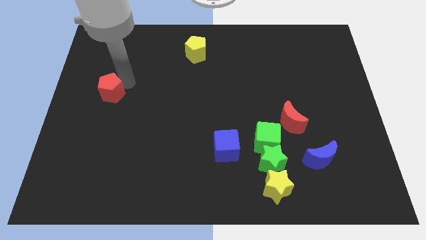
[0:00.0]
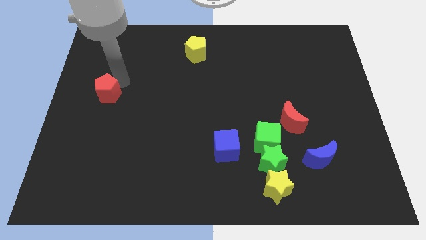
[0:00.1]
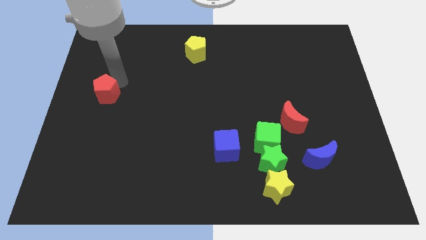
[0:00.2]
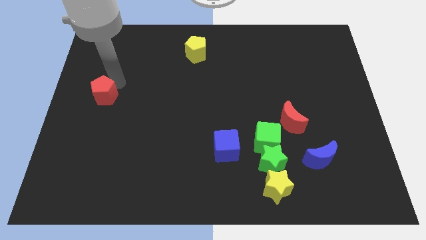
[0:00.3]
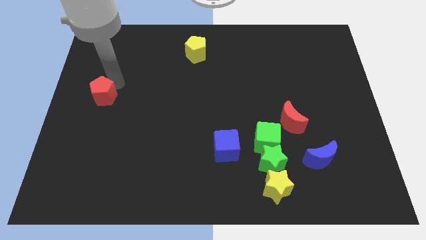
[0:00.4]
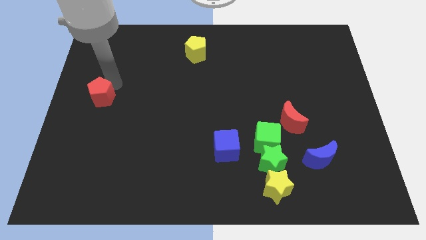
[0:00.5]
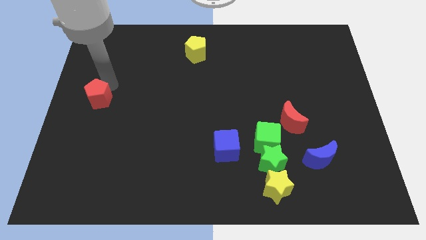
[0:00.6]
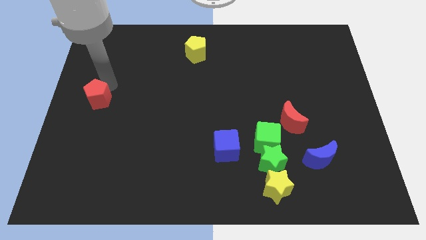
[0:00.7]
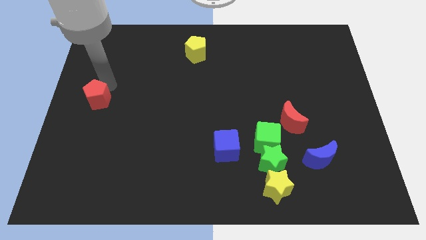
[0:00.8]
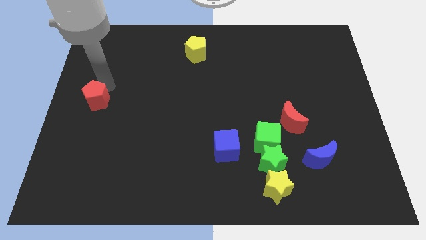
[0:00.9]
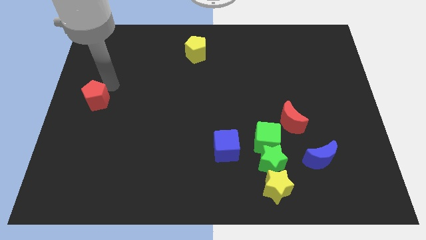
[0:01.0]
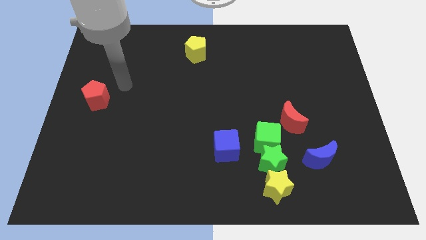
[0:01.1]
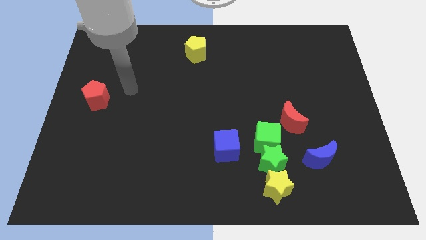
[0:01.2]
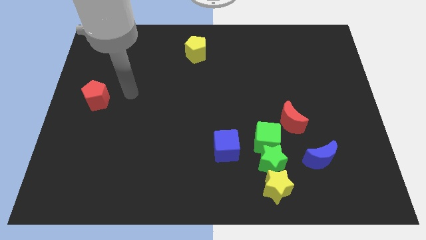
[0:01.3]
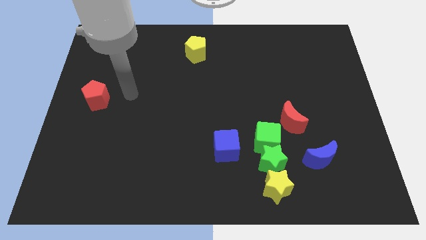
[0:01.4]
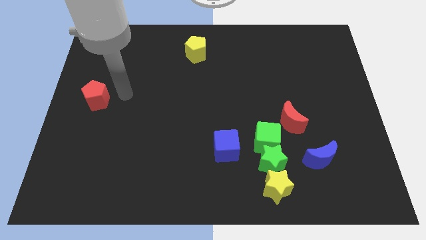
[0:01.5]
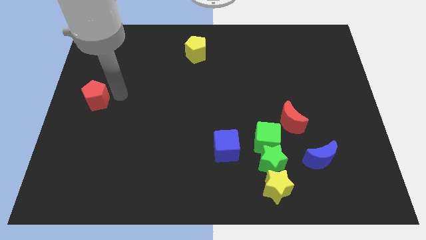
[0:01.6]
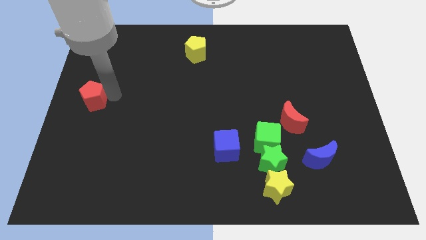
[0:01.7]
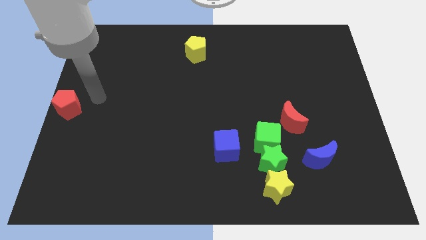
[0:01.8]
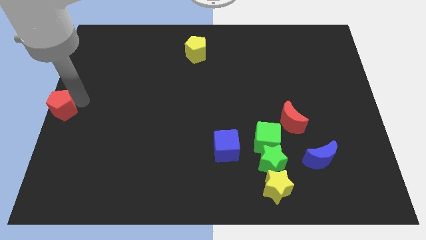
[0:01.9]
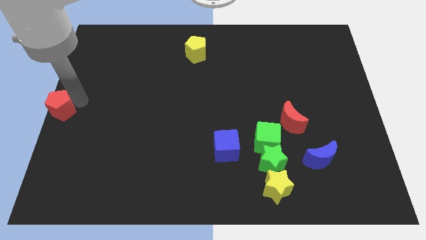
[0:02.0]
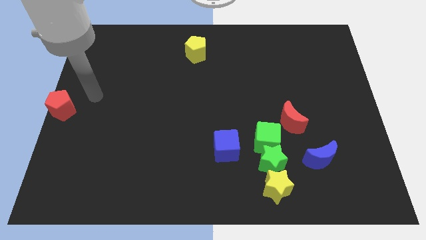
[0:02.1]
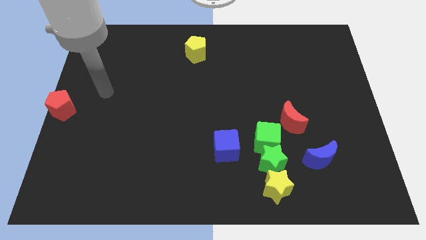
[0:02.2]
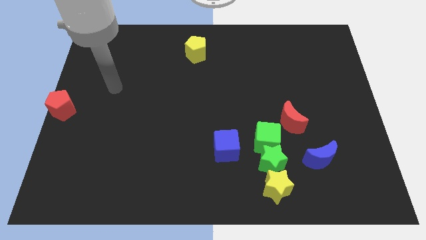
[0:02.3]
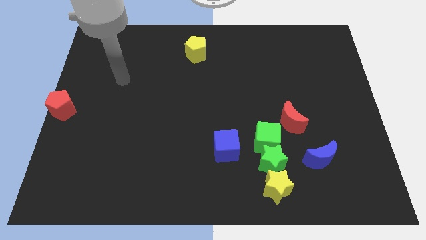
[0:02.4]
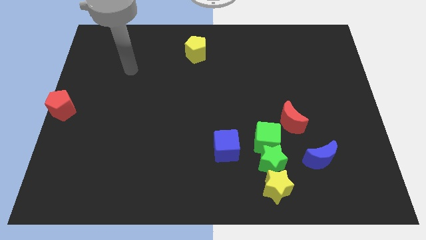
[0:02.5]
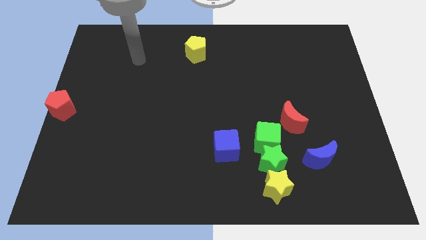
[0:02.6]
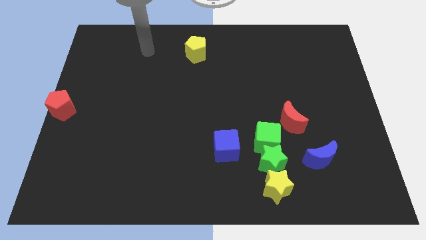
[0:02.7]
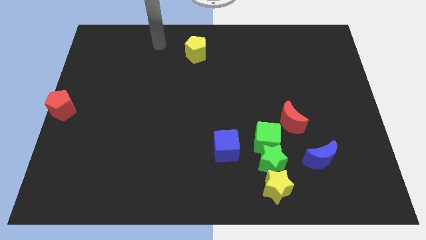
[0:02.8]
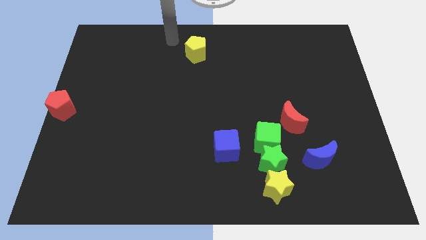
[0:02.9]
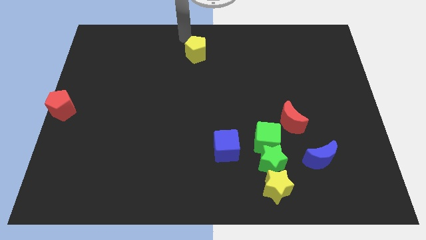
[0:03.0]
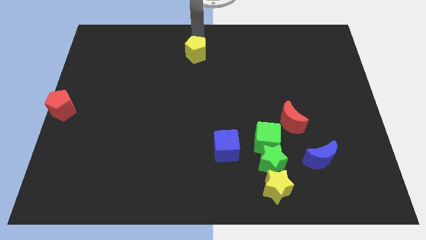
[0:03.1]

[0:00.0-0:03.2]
put the red pentagon at the center left

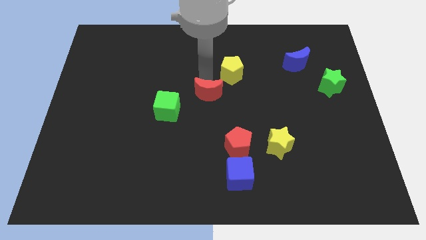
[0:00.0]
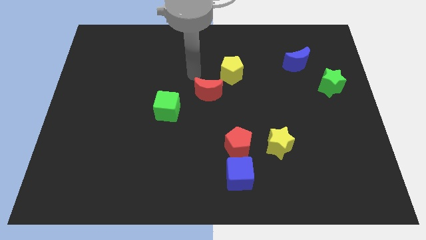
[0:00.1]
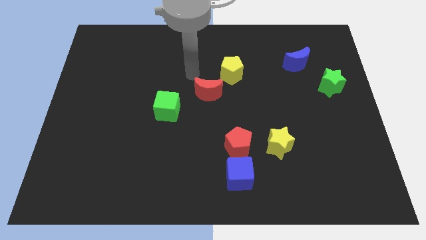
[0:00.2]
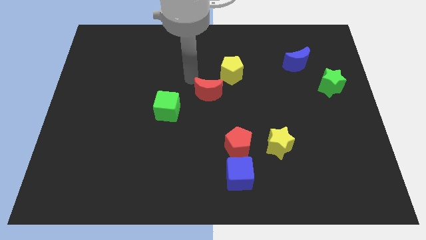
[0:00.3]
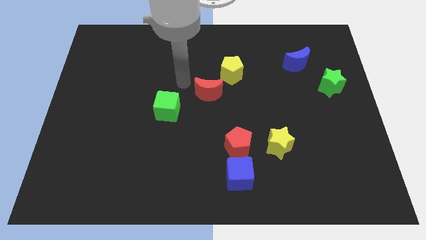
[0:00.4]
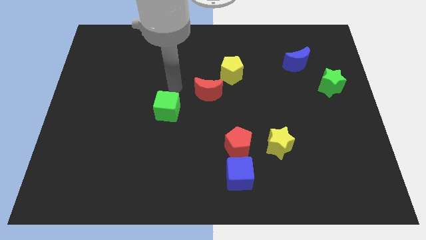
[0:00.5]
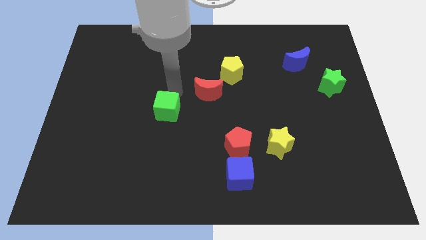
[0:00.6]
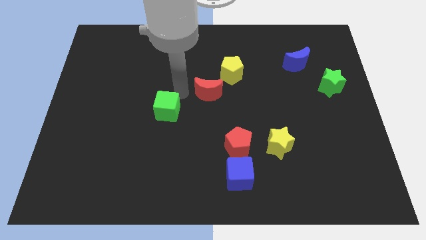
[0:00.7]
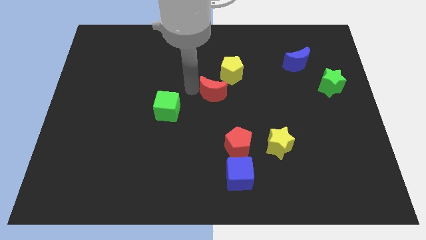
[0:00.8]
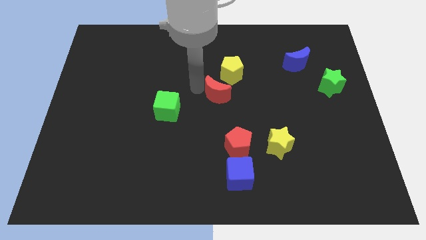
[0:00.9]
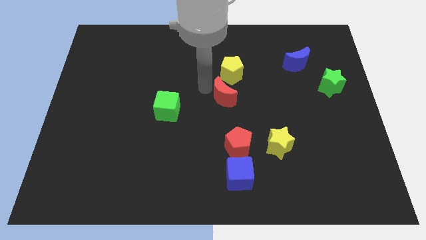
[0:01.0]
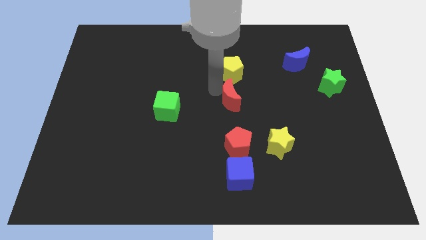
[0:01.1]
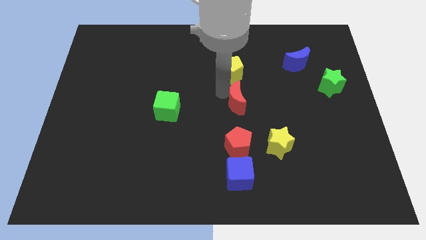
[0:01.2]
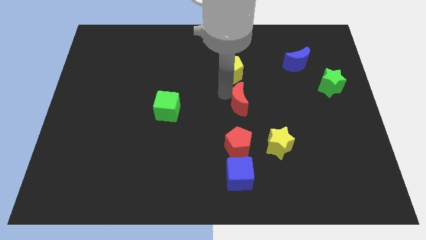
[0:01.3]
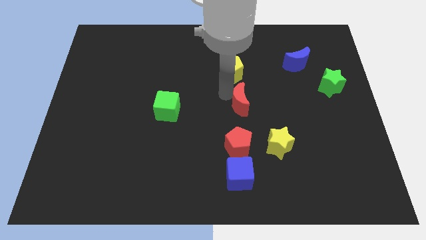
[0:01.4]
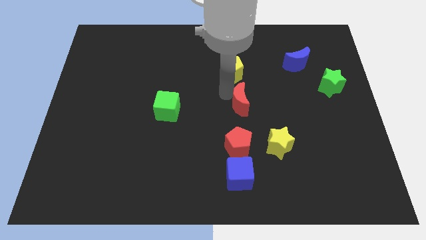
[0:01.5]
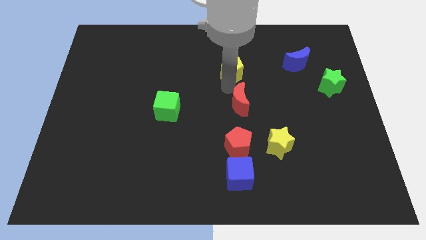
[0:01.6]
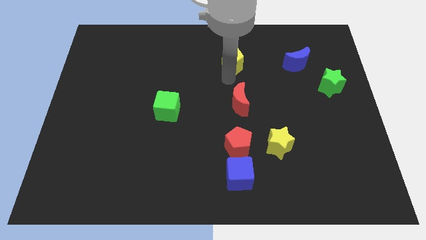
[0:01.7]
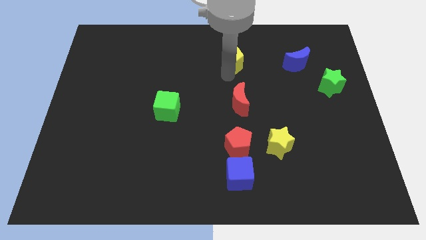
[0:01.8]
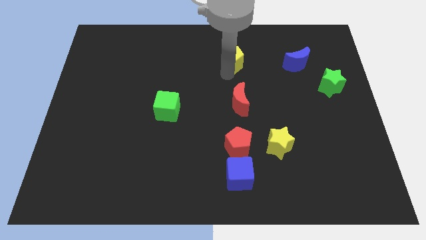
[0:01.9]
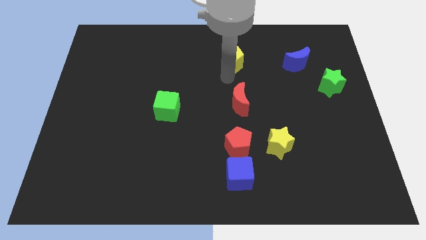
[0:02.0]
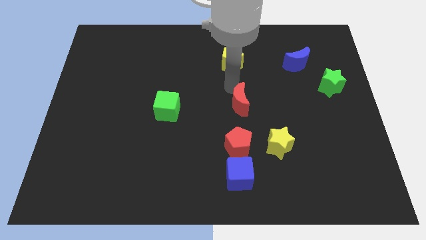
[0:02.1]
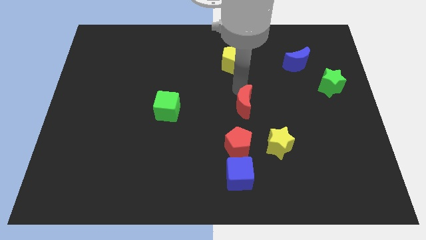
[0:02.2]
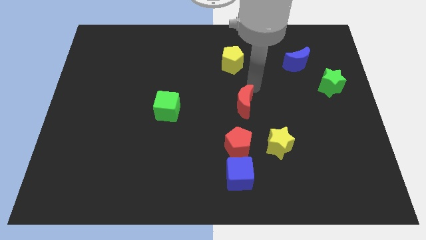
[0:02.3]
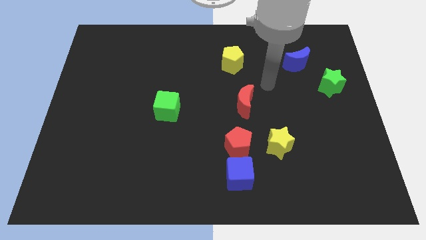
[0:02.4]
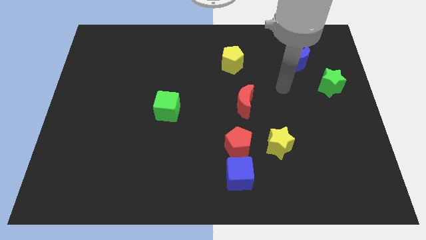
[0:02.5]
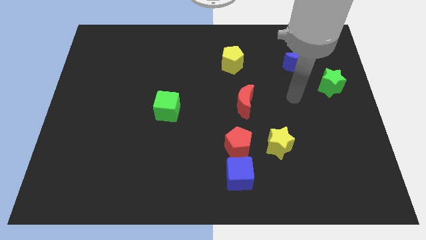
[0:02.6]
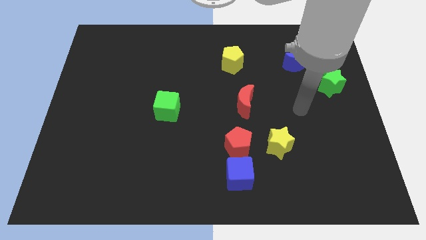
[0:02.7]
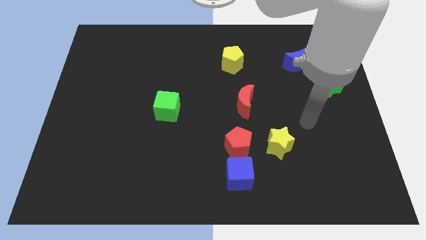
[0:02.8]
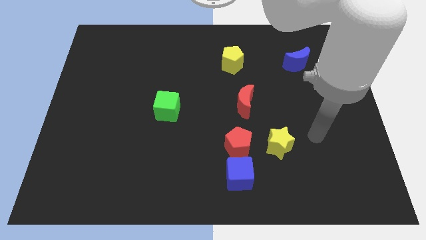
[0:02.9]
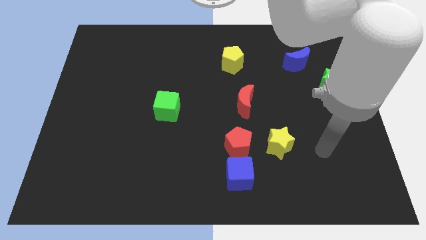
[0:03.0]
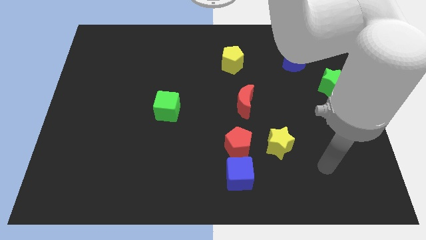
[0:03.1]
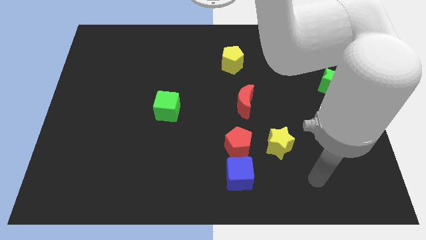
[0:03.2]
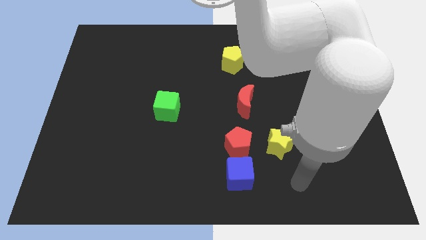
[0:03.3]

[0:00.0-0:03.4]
place the red moon in between the yellow pentagon and the red pentagon

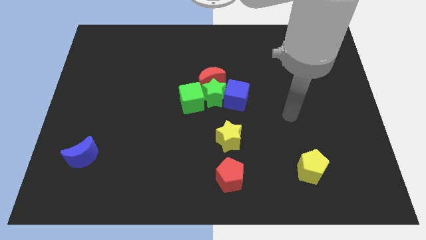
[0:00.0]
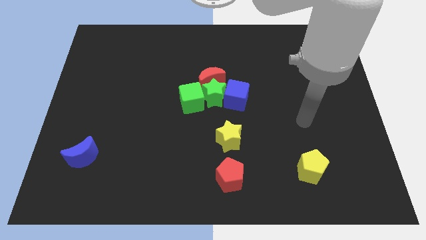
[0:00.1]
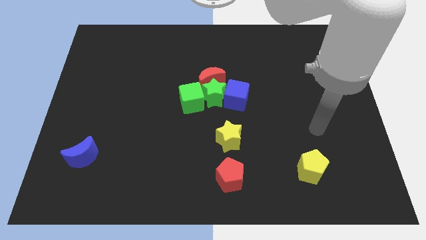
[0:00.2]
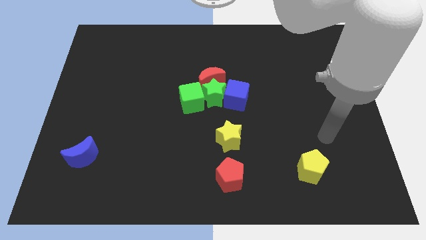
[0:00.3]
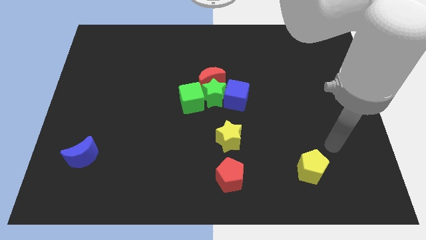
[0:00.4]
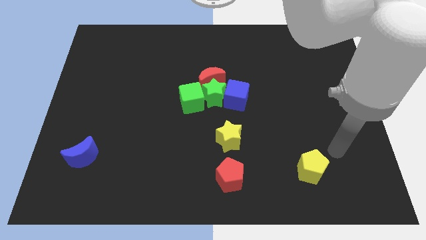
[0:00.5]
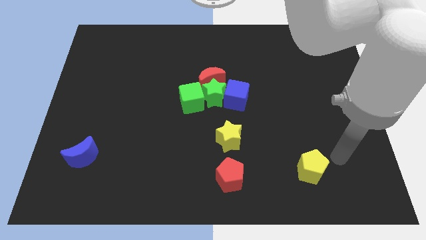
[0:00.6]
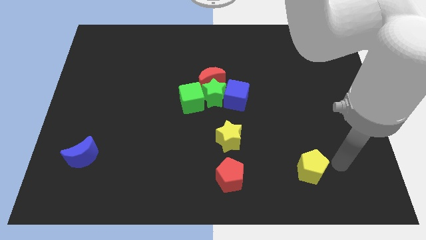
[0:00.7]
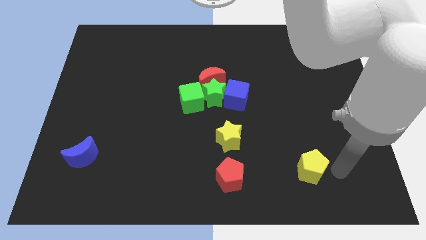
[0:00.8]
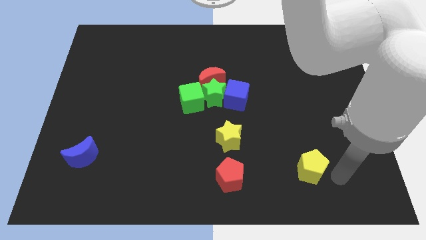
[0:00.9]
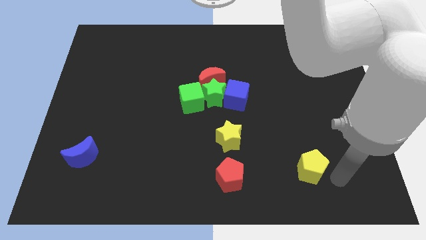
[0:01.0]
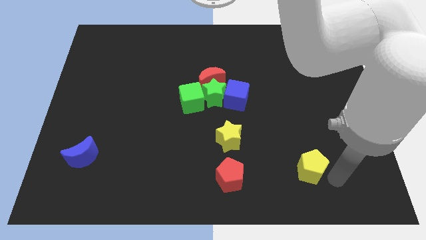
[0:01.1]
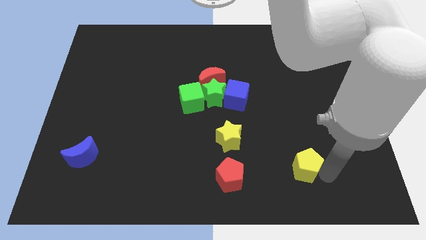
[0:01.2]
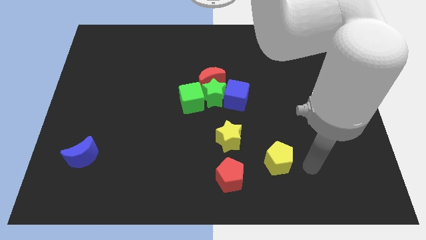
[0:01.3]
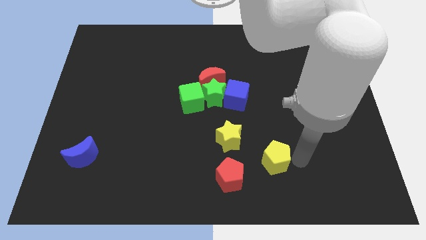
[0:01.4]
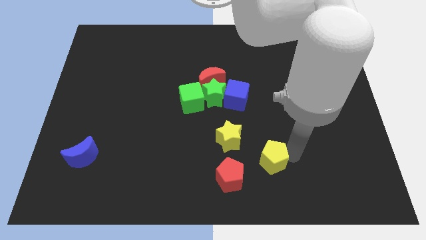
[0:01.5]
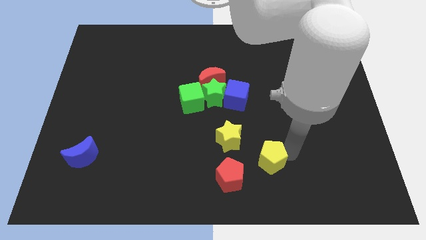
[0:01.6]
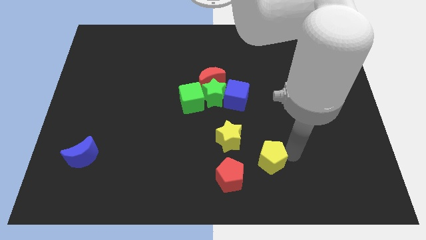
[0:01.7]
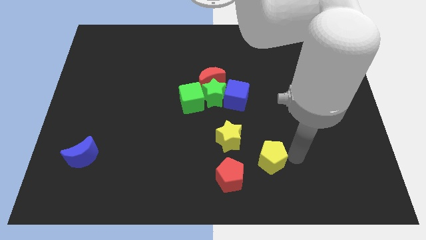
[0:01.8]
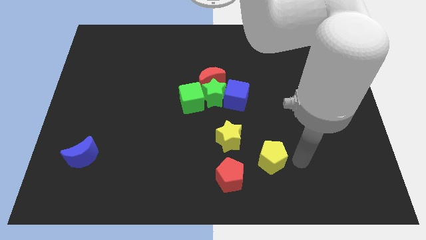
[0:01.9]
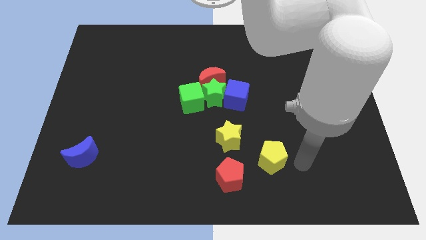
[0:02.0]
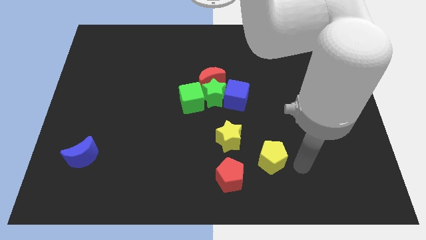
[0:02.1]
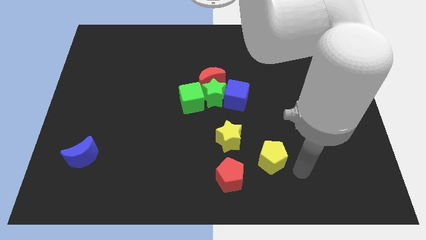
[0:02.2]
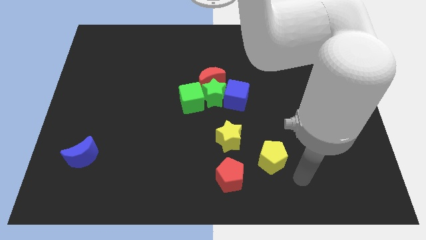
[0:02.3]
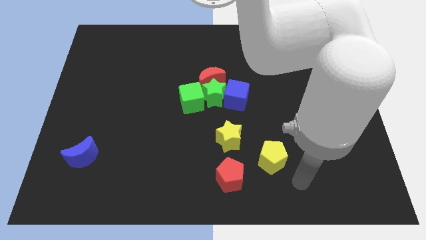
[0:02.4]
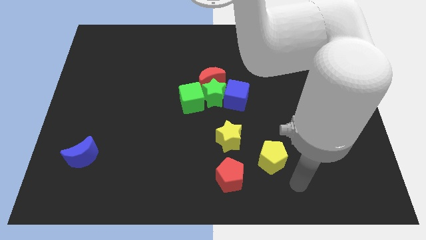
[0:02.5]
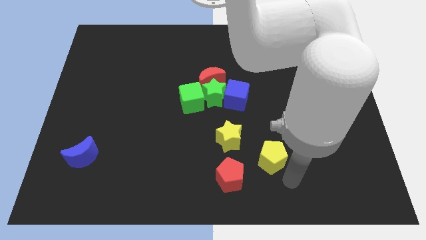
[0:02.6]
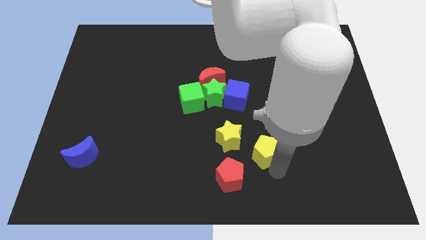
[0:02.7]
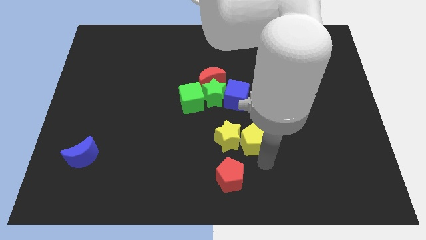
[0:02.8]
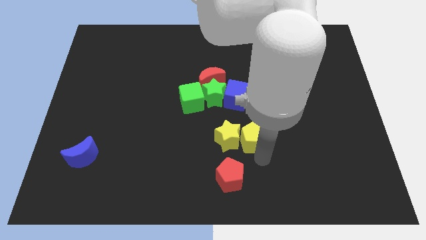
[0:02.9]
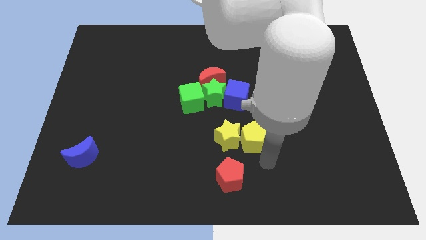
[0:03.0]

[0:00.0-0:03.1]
place the yellow pentagon to the right of the yellow star
